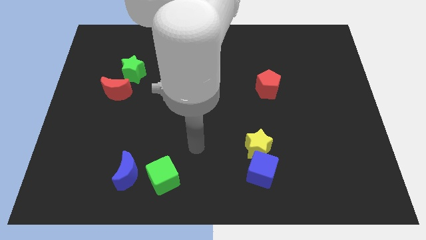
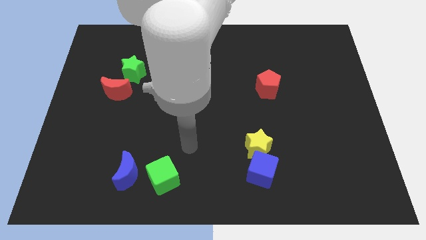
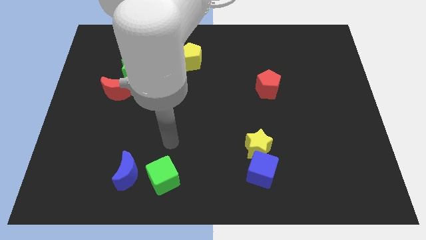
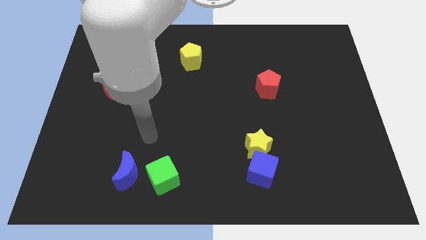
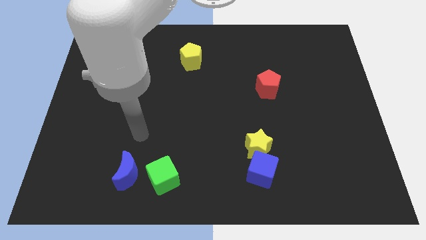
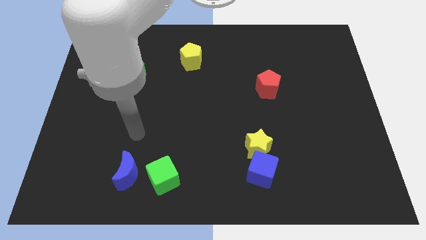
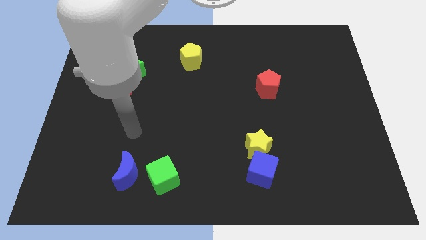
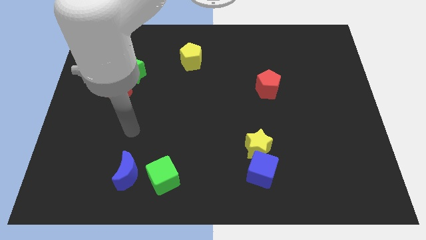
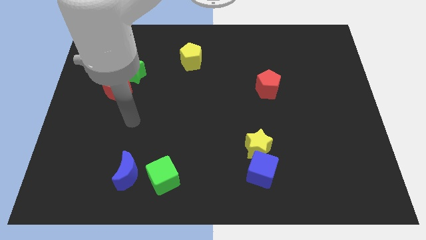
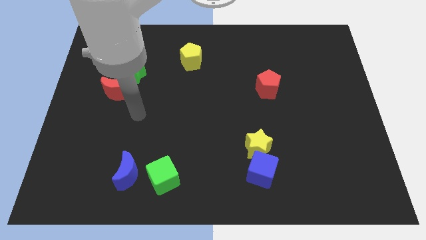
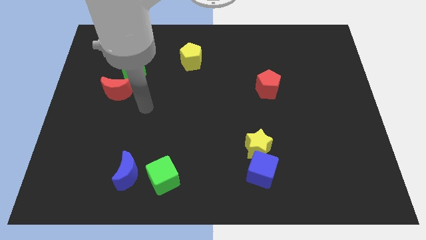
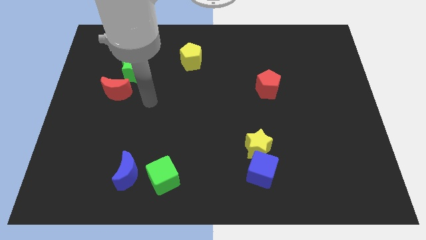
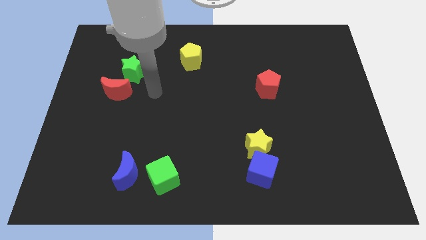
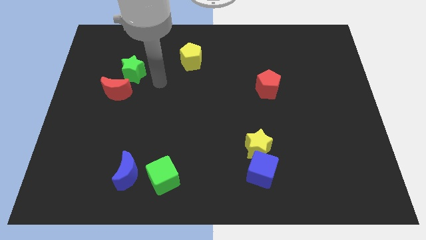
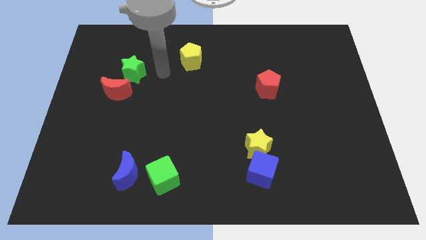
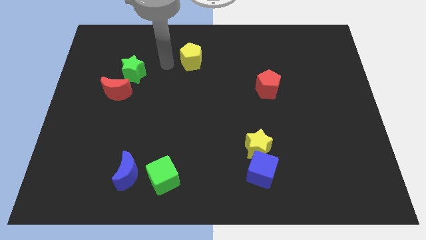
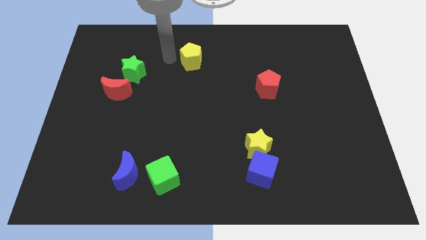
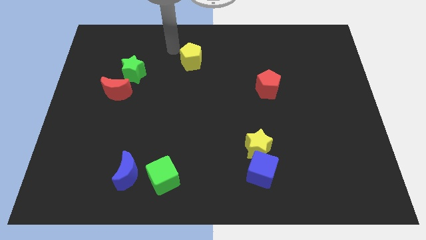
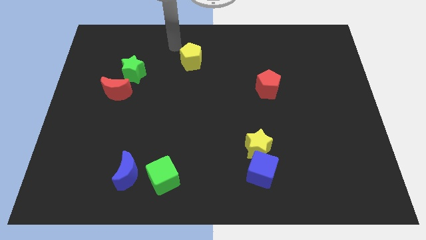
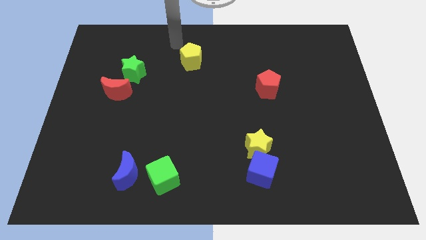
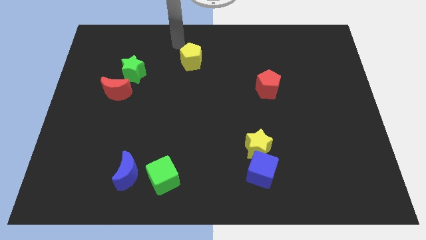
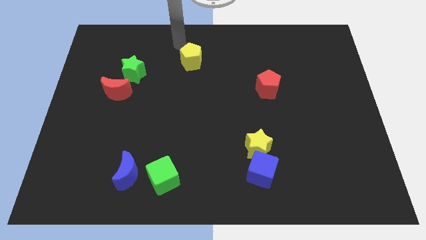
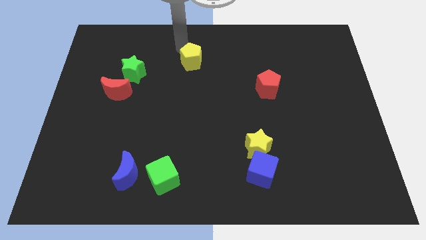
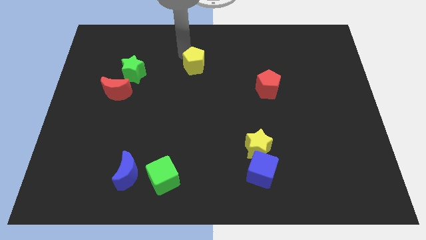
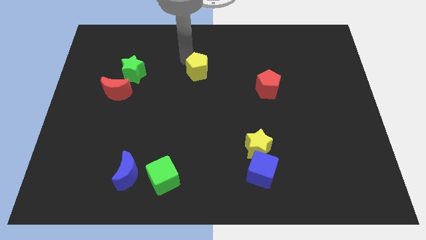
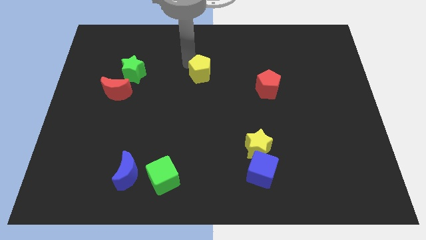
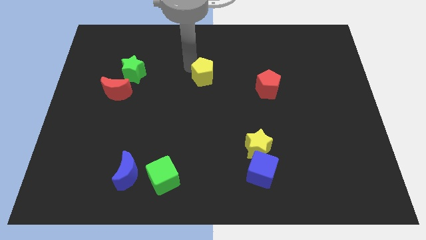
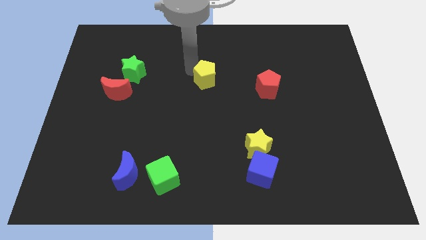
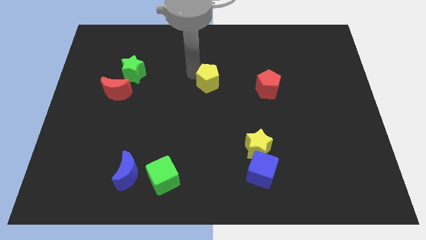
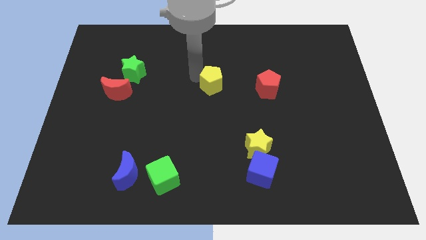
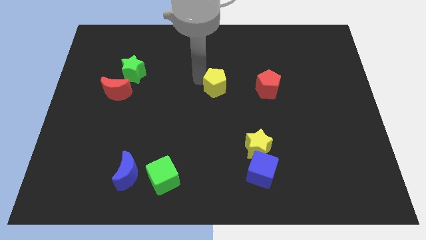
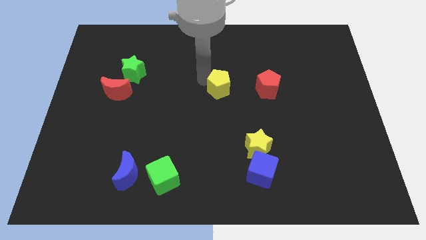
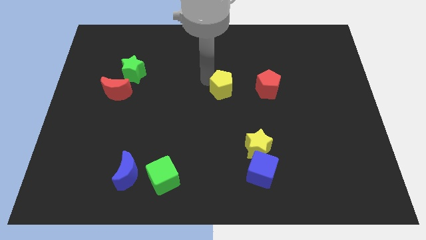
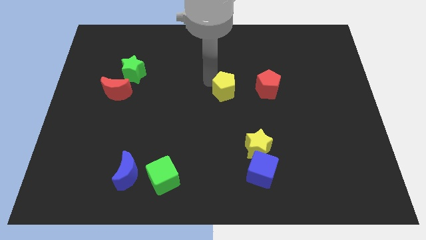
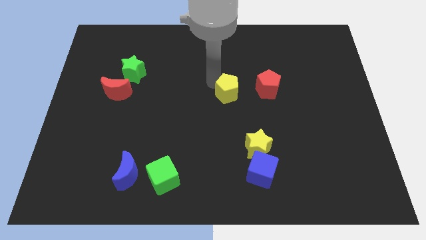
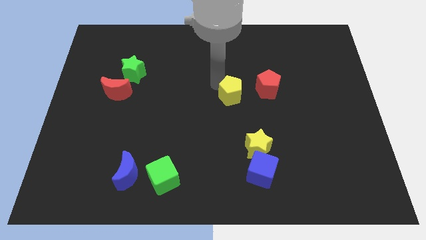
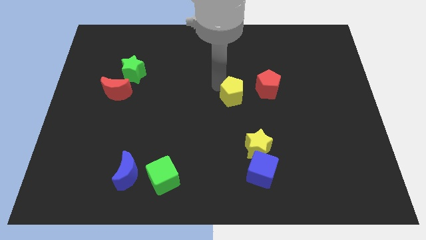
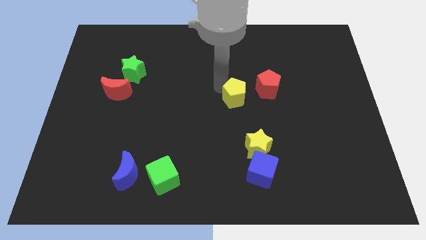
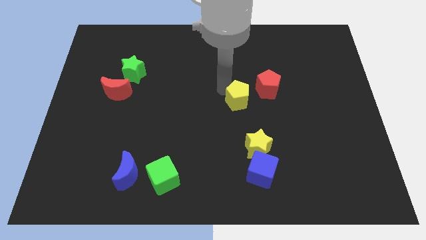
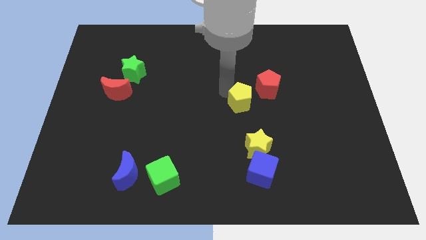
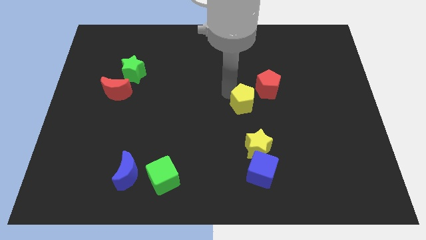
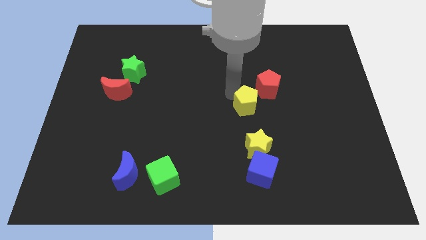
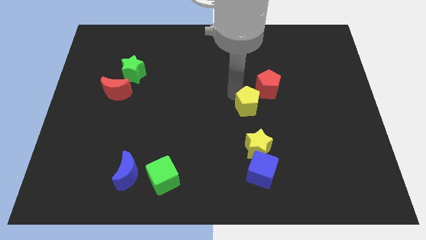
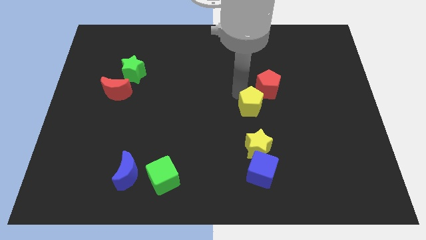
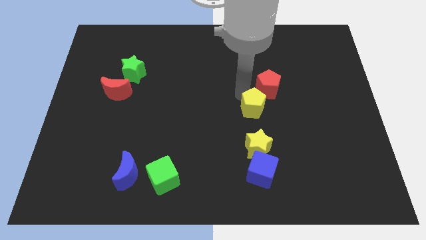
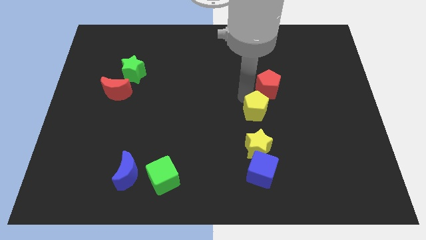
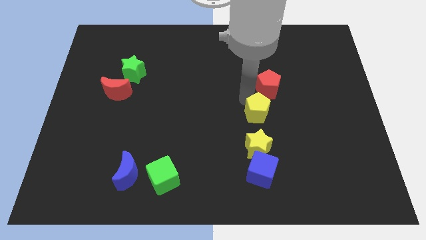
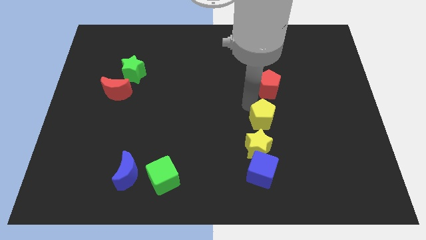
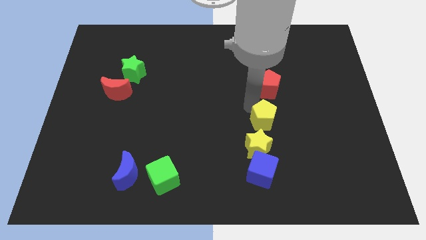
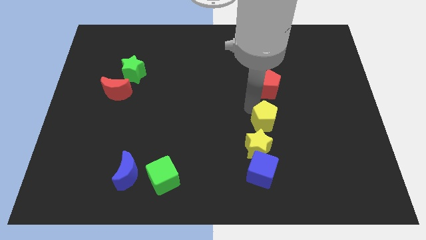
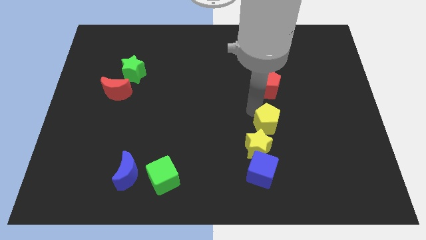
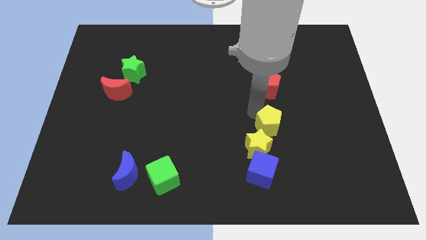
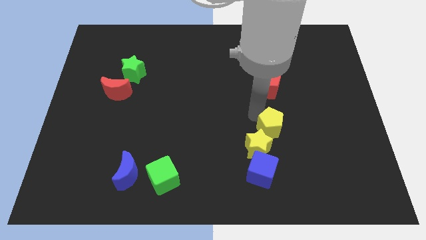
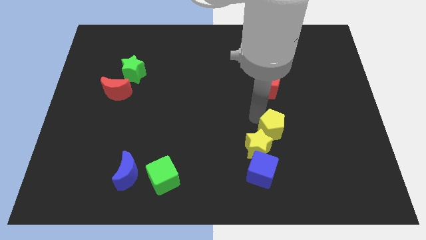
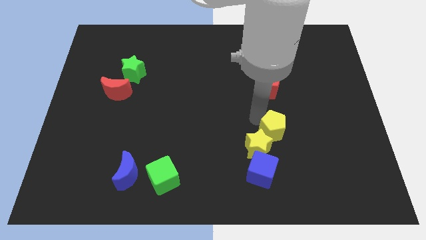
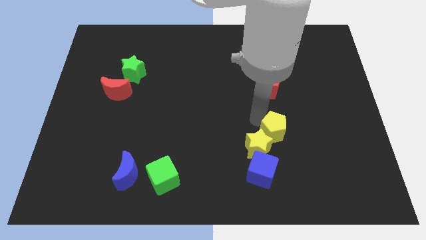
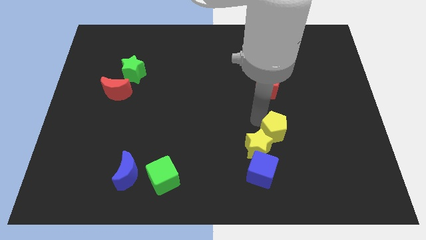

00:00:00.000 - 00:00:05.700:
push the yellow pentagon next to the yellow star

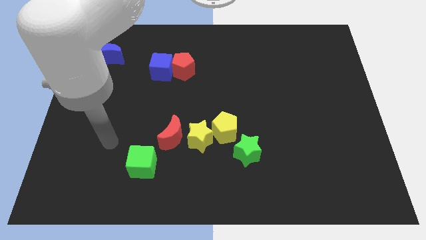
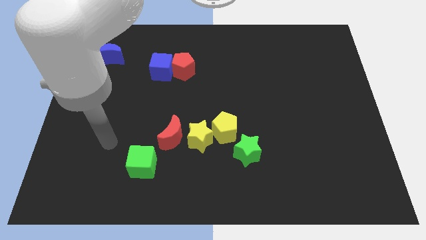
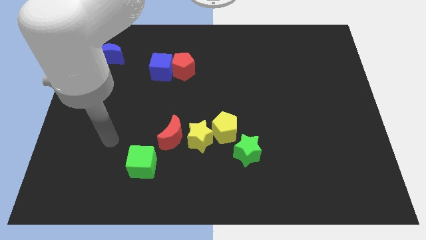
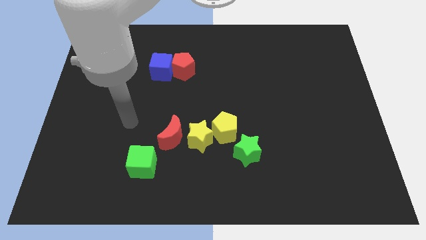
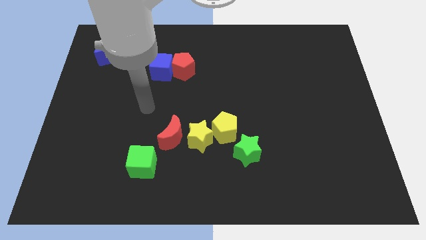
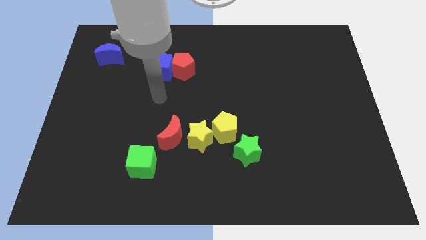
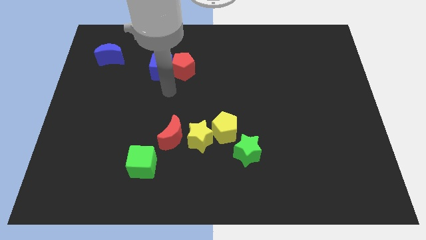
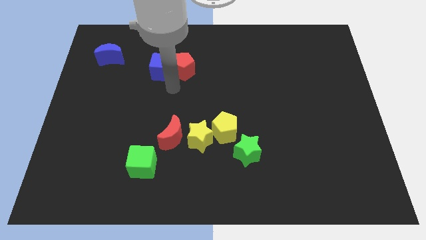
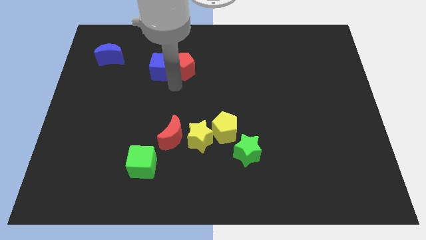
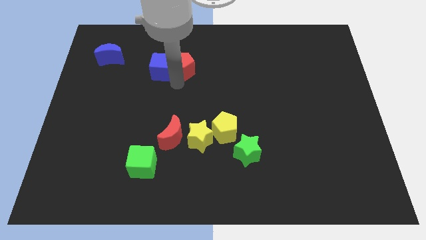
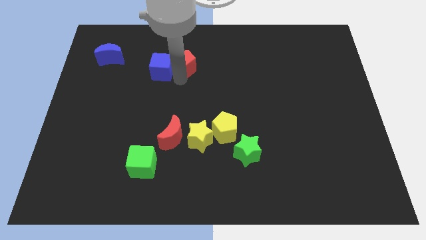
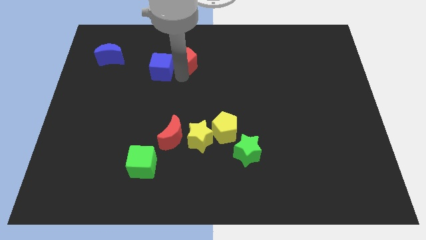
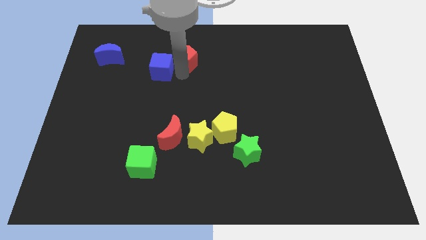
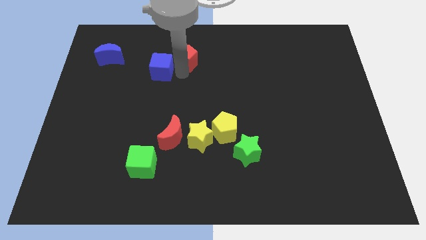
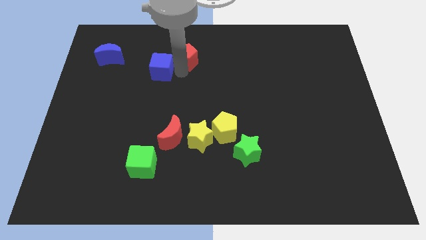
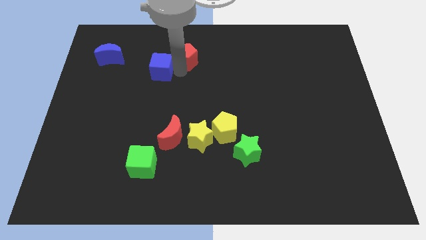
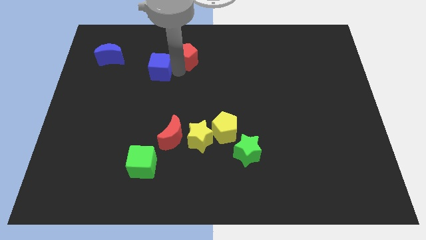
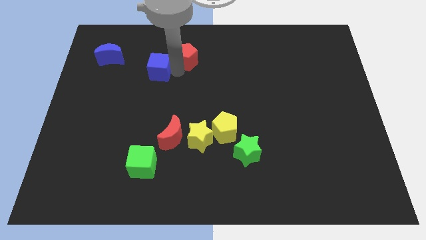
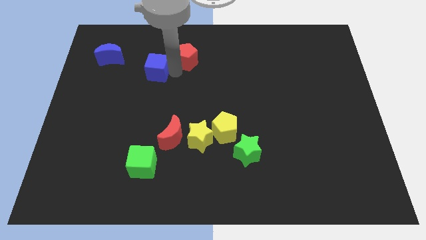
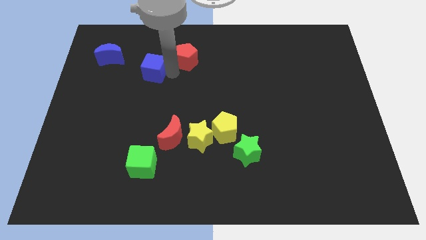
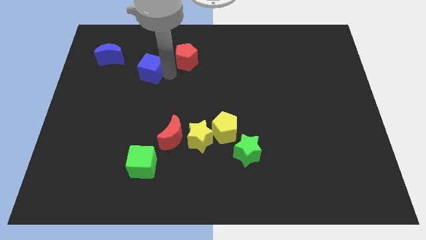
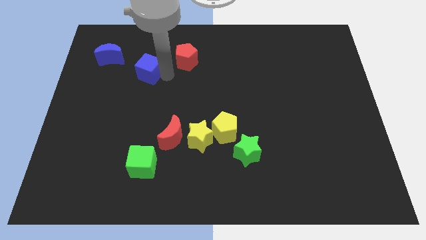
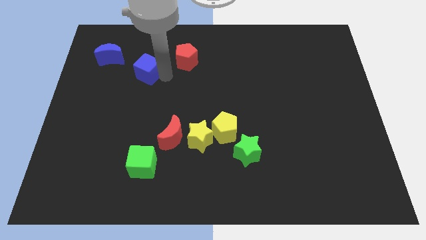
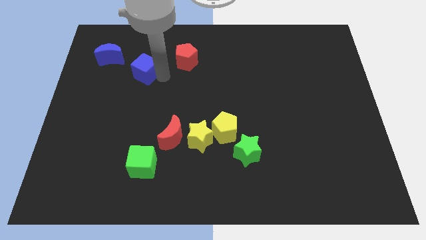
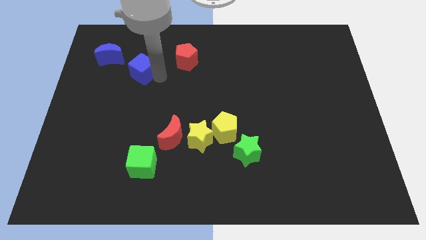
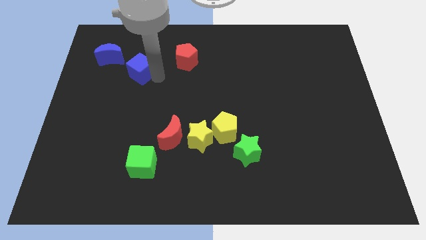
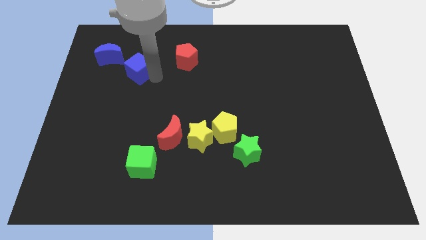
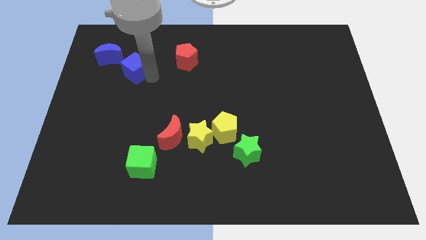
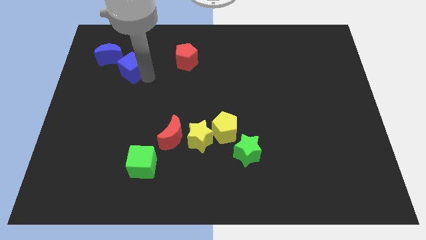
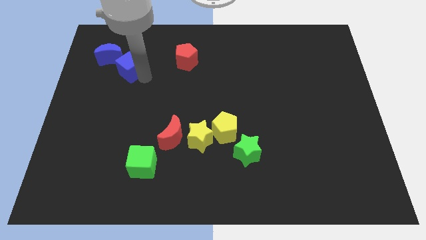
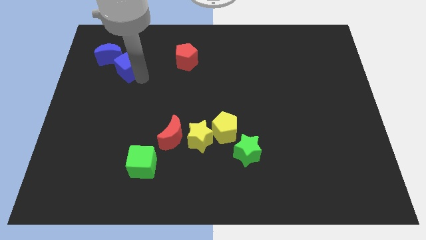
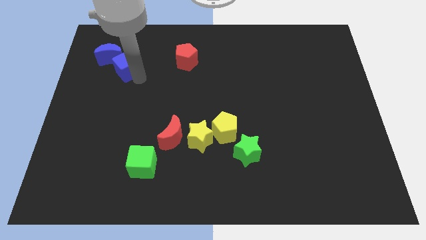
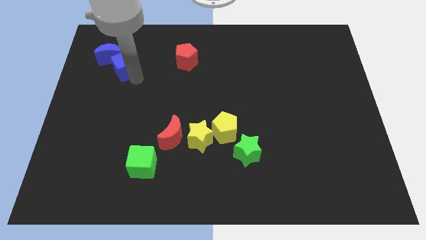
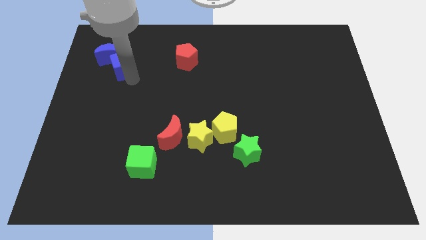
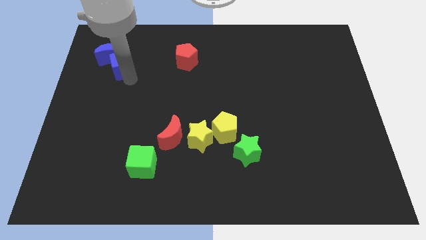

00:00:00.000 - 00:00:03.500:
move the blue cube towards the blue moon
